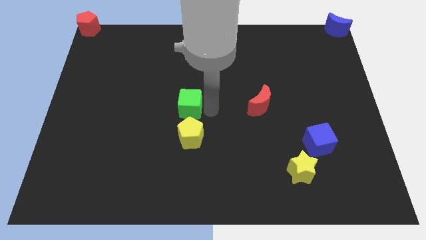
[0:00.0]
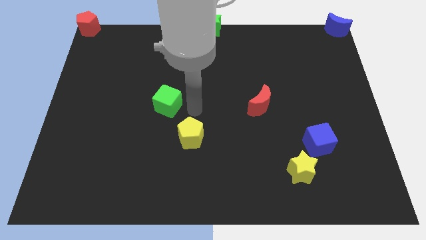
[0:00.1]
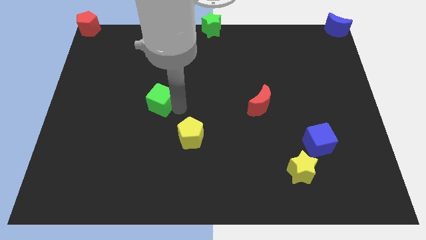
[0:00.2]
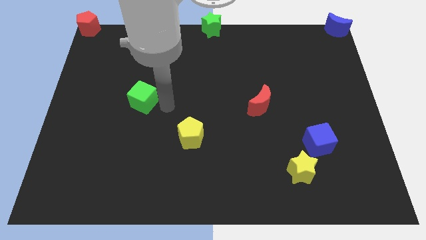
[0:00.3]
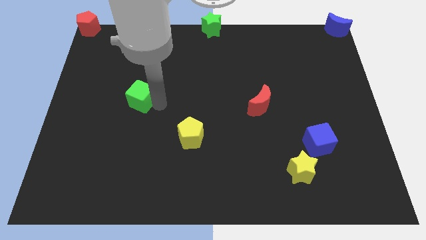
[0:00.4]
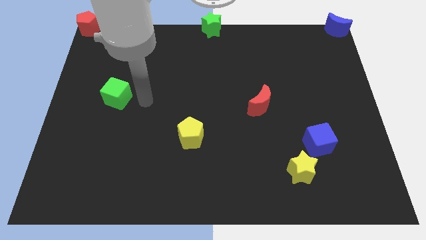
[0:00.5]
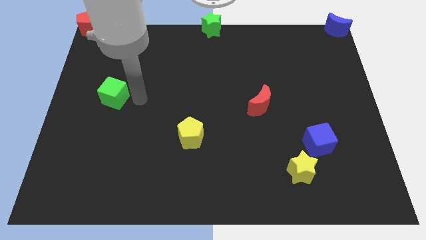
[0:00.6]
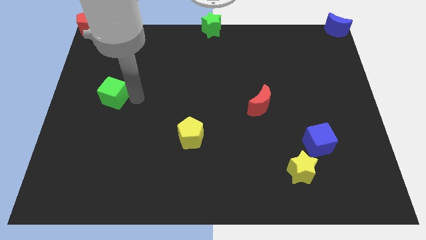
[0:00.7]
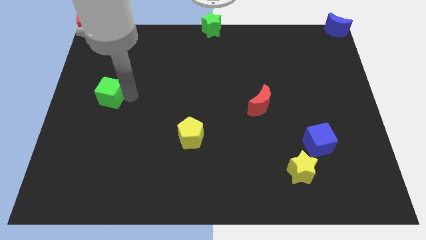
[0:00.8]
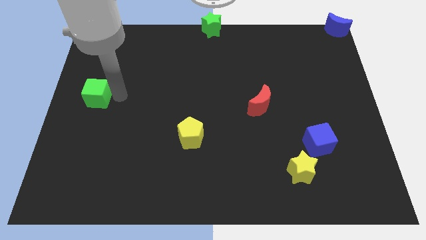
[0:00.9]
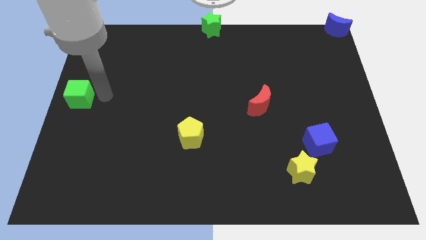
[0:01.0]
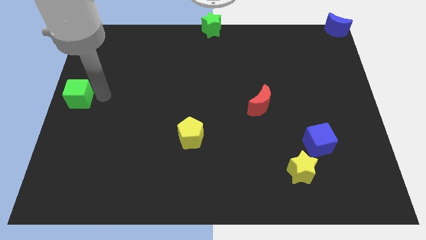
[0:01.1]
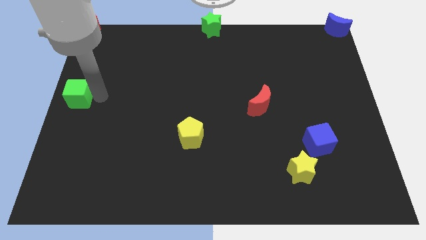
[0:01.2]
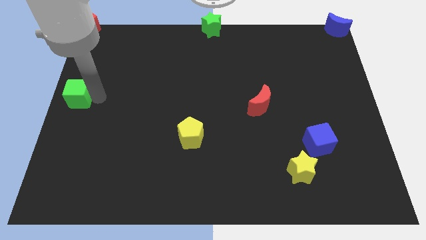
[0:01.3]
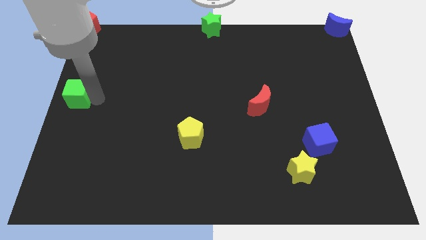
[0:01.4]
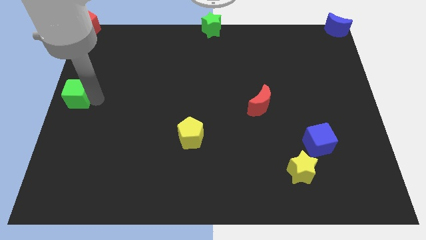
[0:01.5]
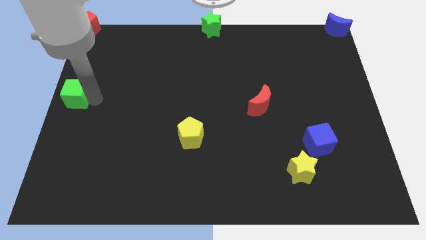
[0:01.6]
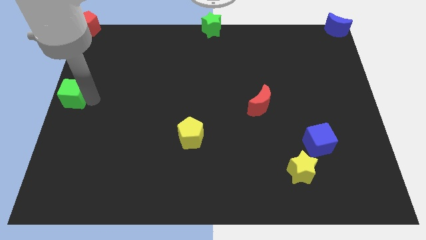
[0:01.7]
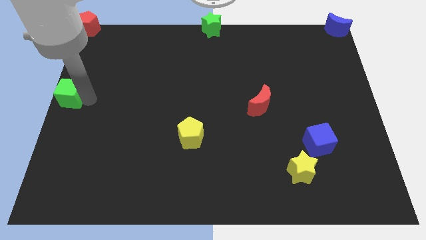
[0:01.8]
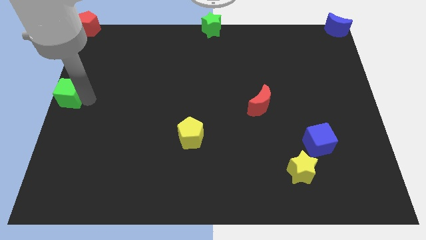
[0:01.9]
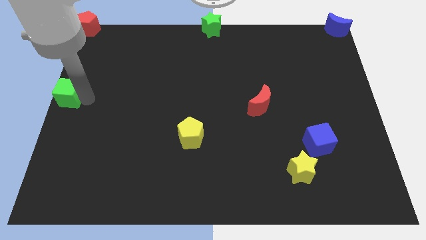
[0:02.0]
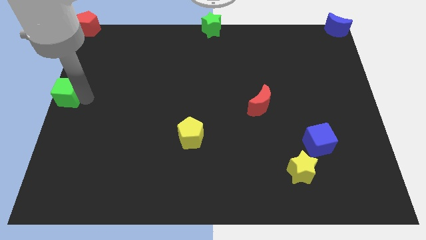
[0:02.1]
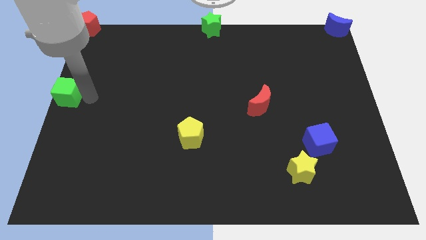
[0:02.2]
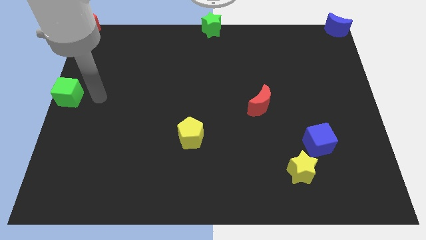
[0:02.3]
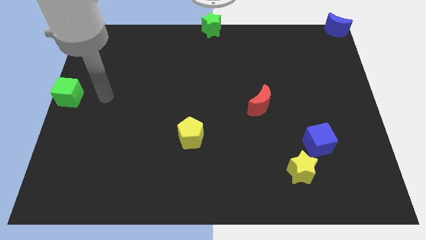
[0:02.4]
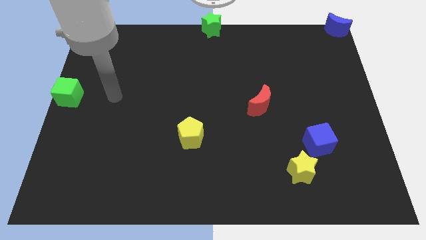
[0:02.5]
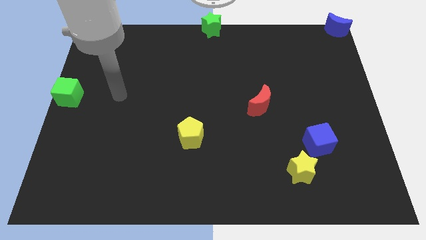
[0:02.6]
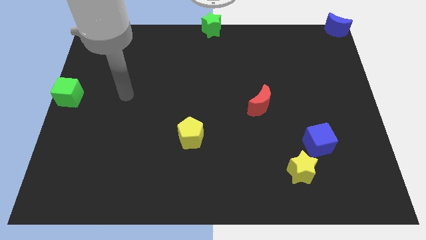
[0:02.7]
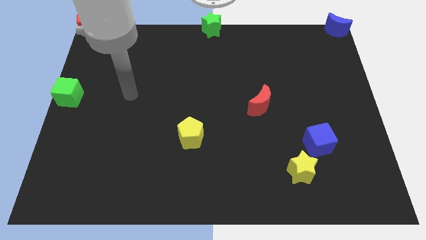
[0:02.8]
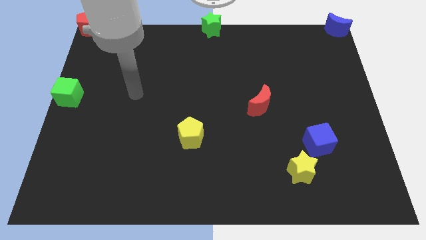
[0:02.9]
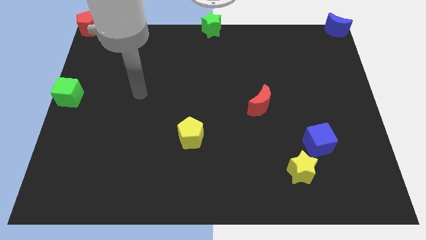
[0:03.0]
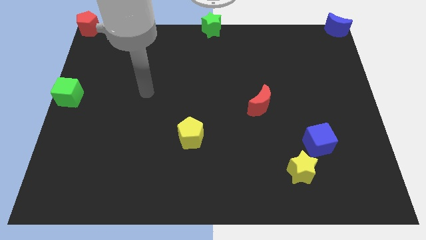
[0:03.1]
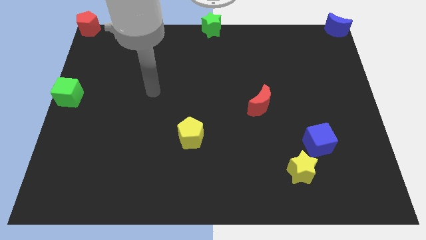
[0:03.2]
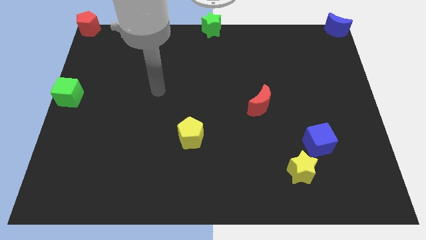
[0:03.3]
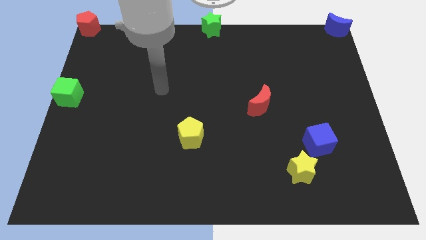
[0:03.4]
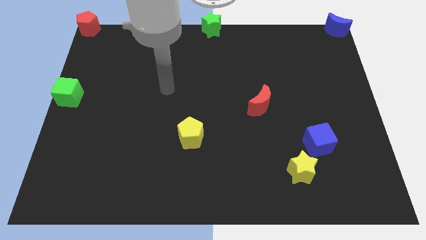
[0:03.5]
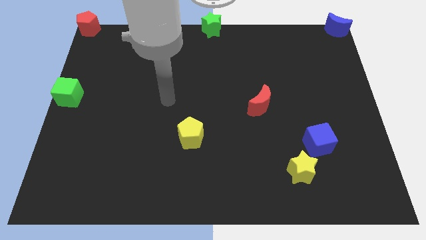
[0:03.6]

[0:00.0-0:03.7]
place the green cube to left center of the board

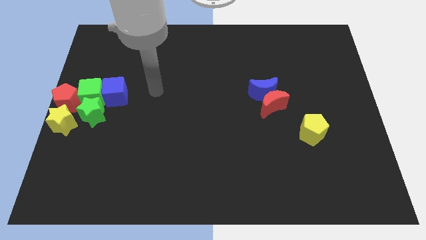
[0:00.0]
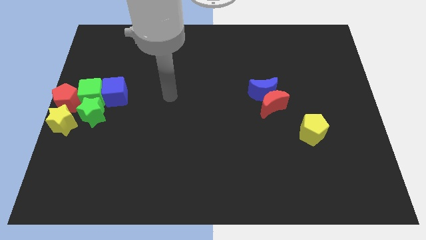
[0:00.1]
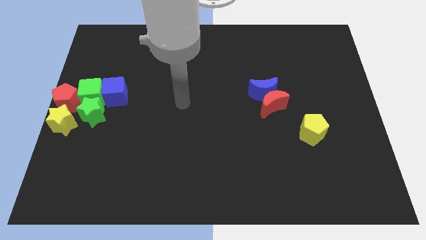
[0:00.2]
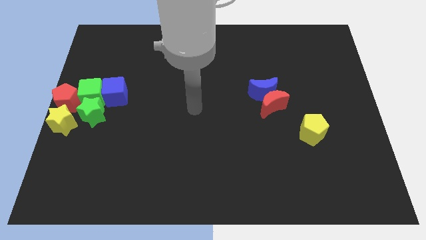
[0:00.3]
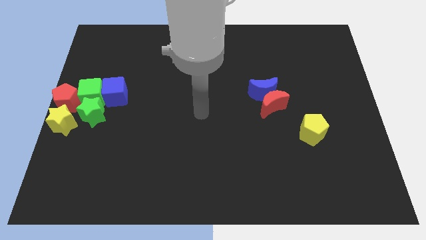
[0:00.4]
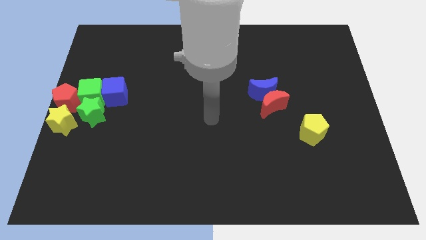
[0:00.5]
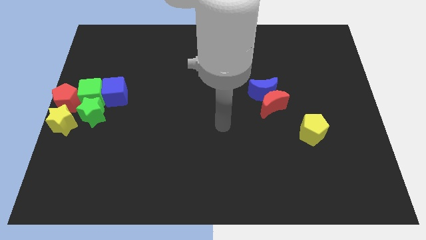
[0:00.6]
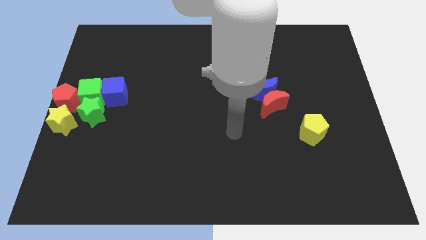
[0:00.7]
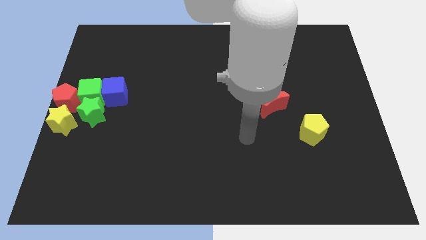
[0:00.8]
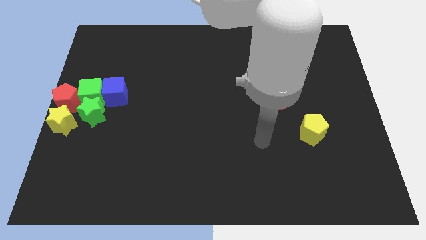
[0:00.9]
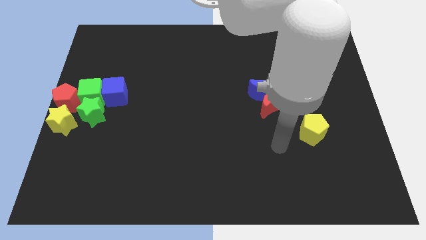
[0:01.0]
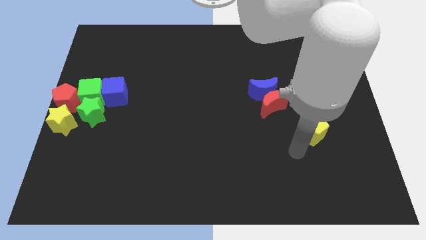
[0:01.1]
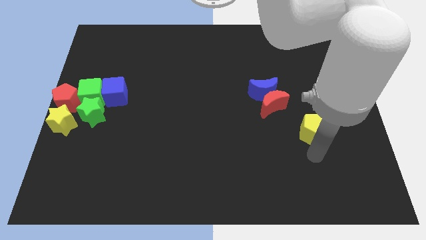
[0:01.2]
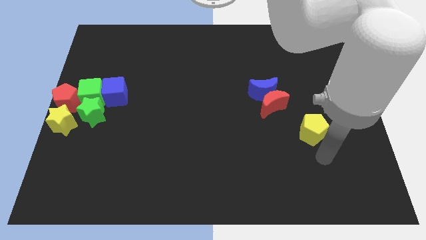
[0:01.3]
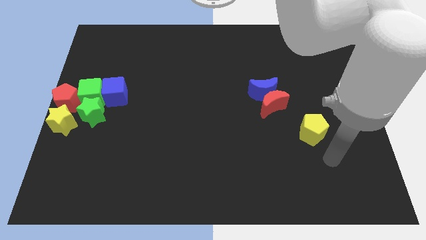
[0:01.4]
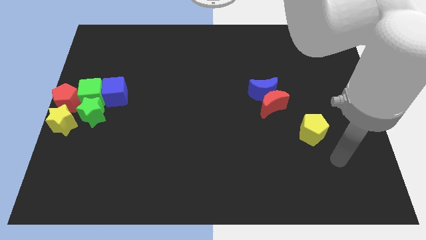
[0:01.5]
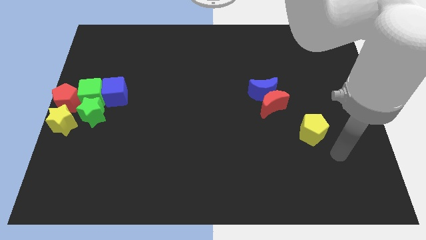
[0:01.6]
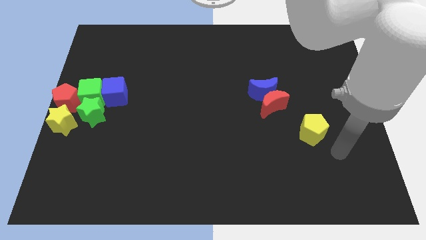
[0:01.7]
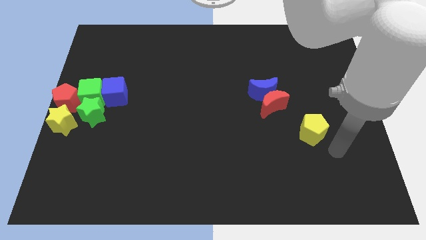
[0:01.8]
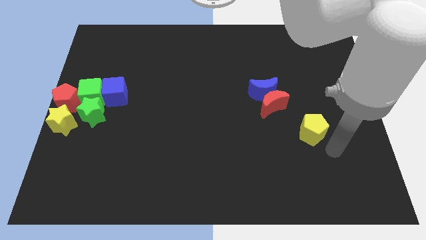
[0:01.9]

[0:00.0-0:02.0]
point your arm to the bottom right side of the yellow pentagon

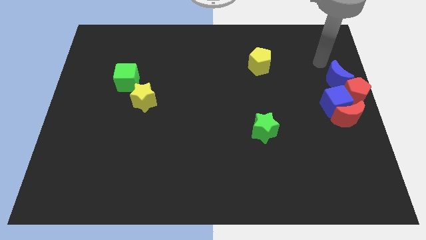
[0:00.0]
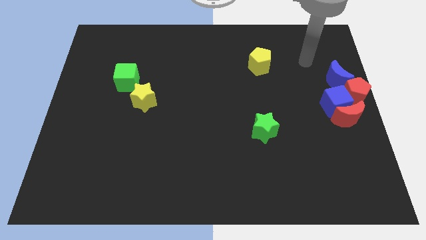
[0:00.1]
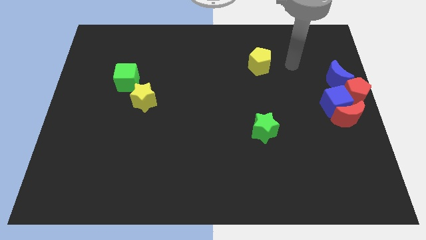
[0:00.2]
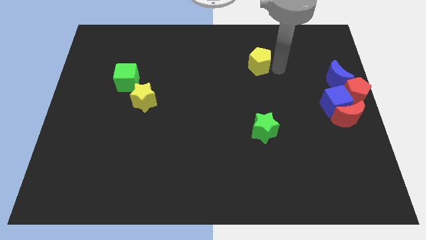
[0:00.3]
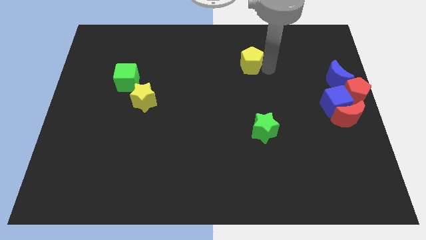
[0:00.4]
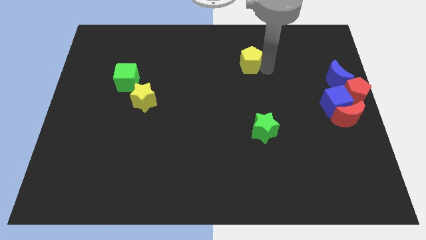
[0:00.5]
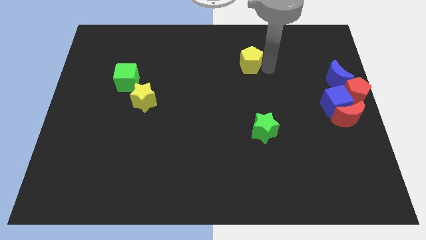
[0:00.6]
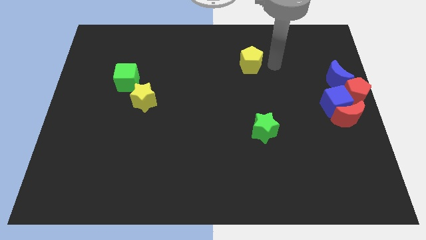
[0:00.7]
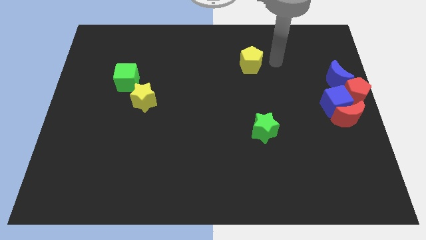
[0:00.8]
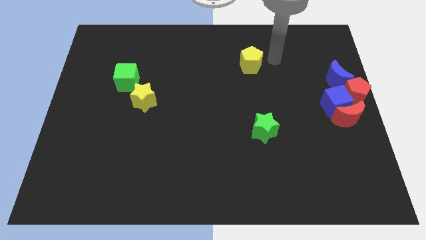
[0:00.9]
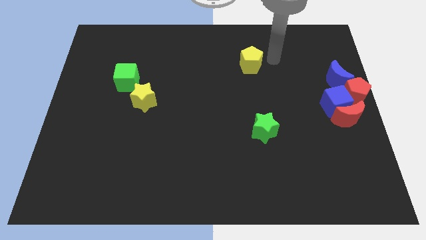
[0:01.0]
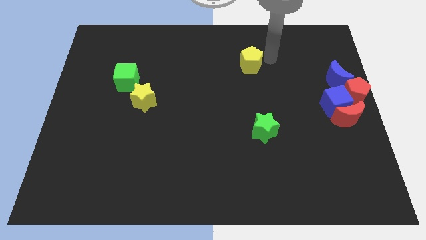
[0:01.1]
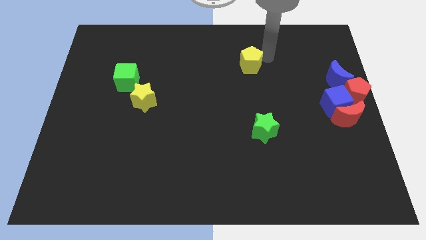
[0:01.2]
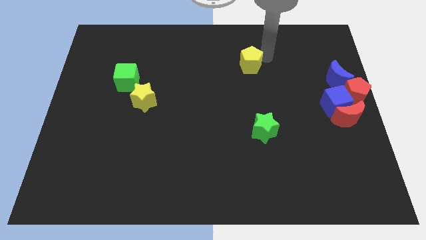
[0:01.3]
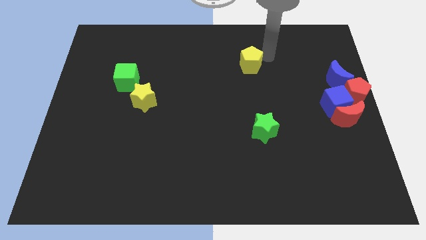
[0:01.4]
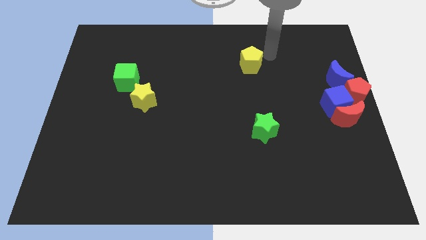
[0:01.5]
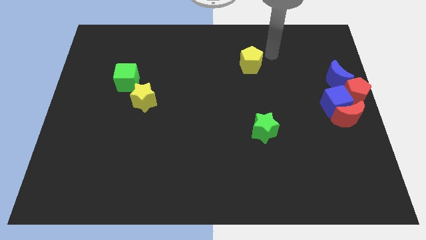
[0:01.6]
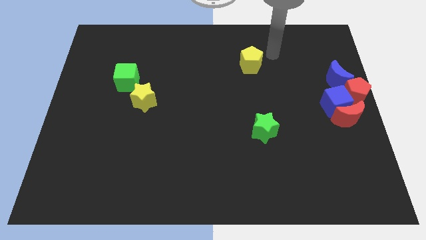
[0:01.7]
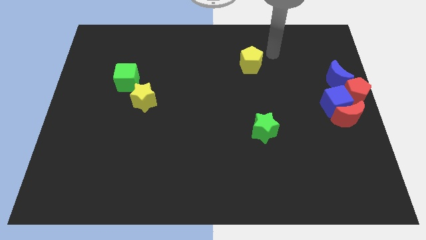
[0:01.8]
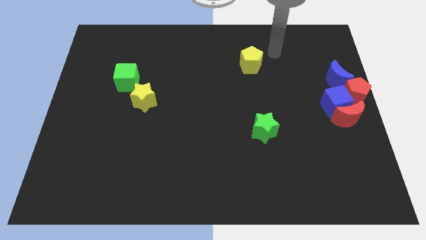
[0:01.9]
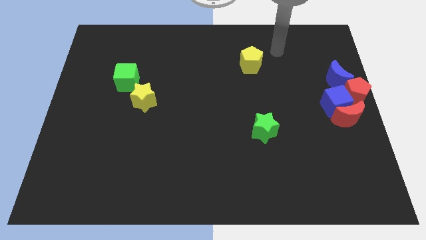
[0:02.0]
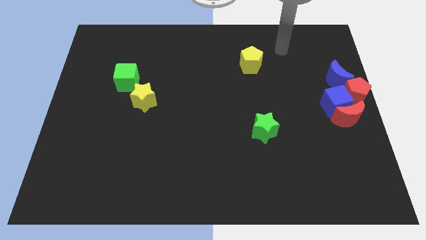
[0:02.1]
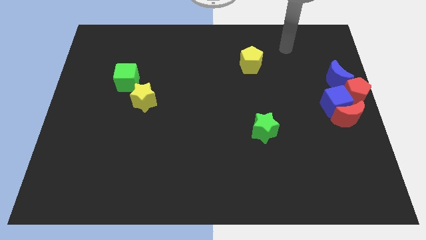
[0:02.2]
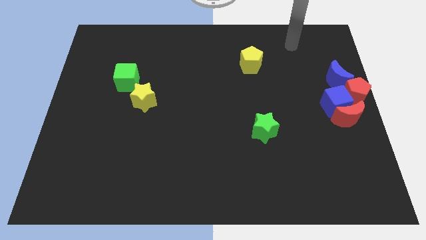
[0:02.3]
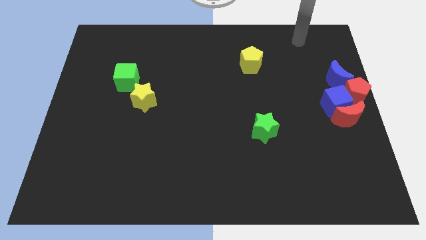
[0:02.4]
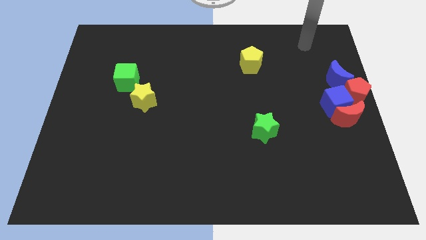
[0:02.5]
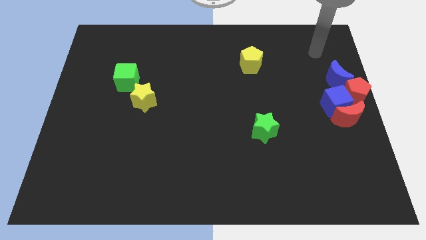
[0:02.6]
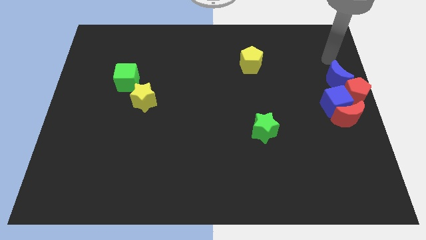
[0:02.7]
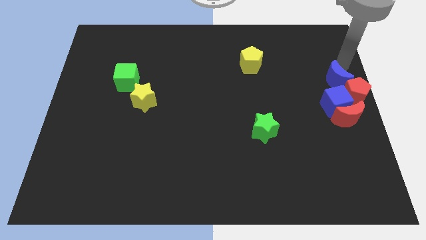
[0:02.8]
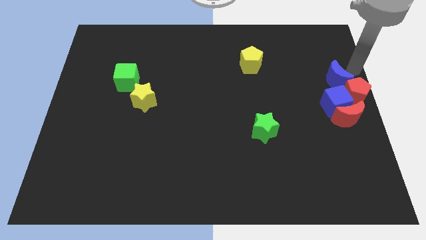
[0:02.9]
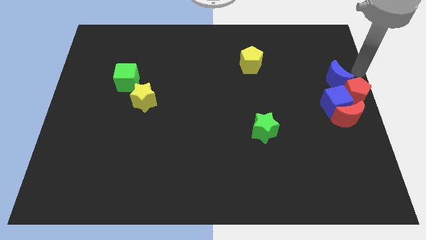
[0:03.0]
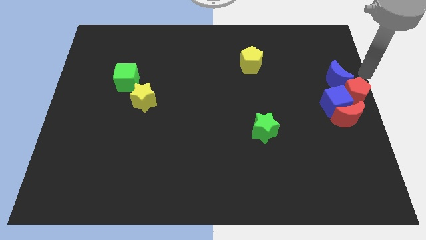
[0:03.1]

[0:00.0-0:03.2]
slightly push the yellow pentagon to the left side of board and move away
